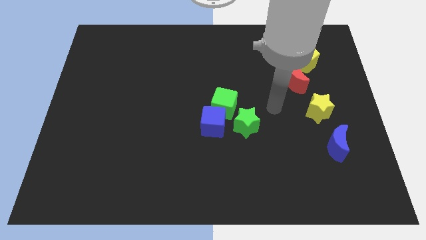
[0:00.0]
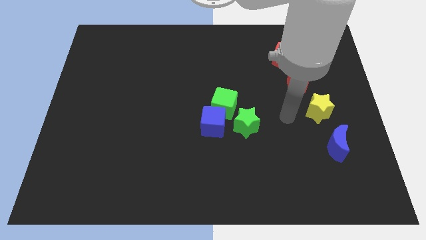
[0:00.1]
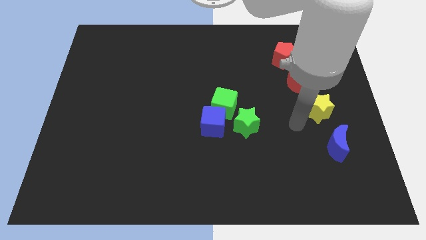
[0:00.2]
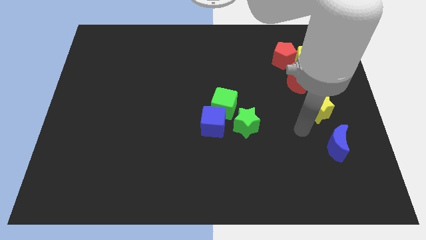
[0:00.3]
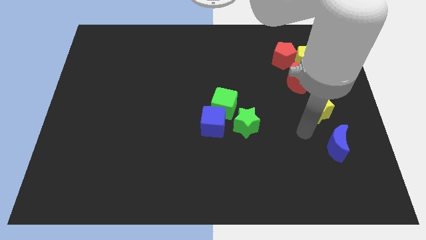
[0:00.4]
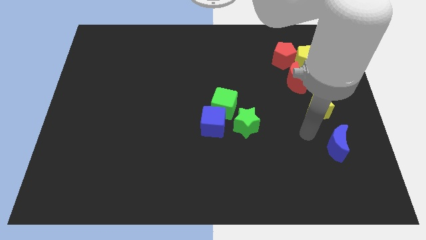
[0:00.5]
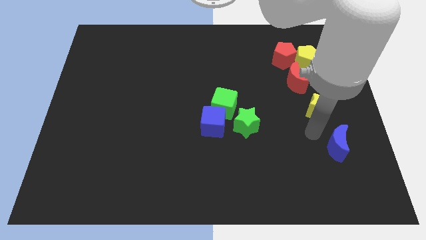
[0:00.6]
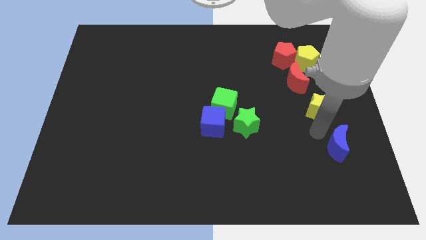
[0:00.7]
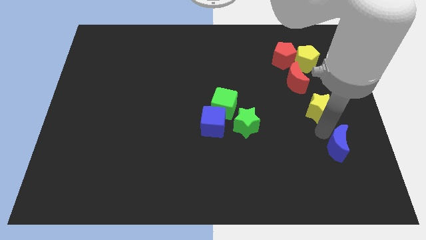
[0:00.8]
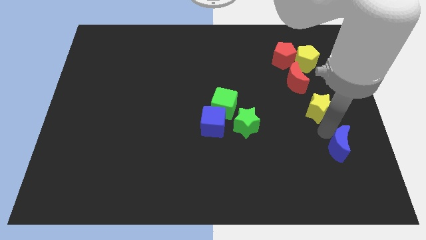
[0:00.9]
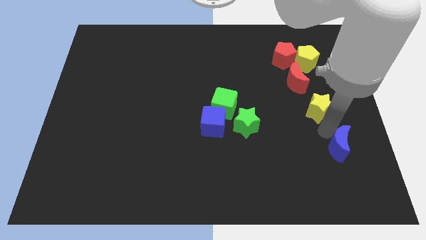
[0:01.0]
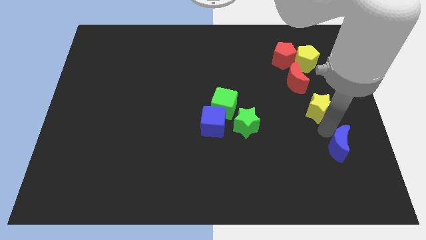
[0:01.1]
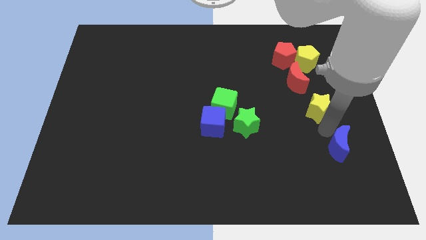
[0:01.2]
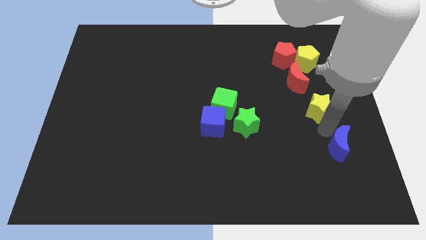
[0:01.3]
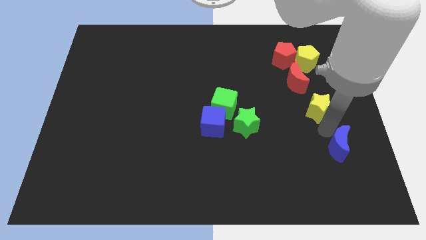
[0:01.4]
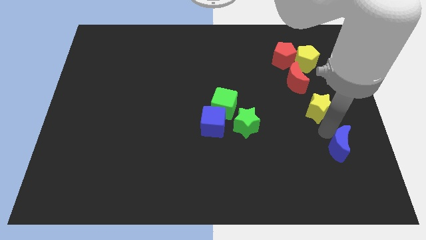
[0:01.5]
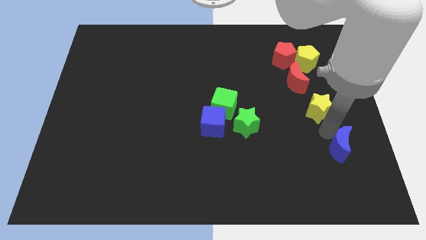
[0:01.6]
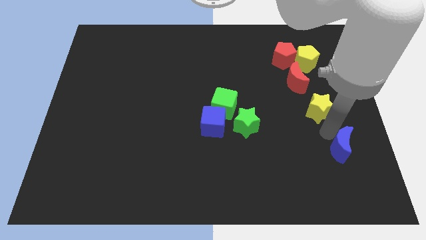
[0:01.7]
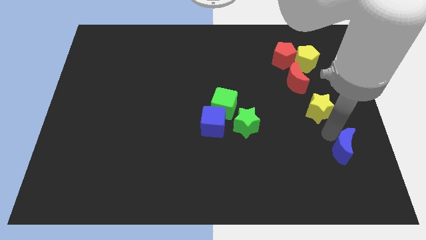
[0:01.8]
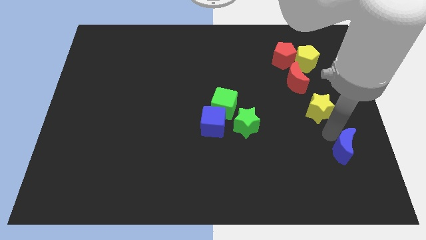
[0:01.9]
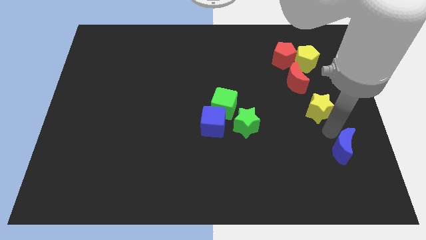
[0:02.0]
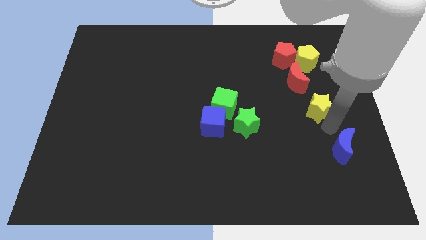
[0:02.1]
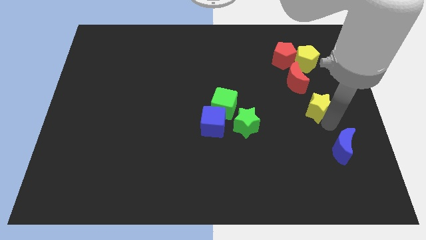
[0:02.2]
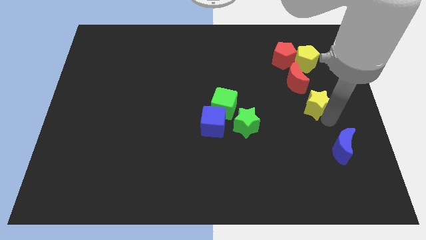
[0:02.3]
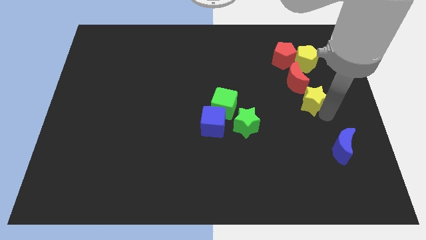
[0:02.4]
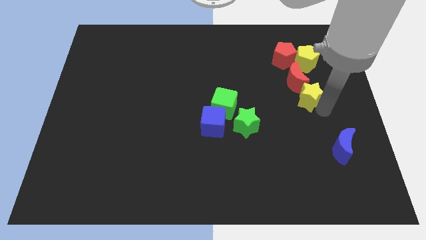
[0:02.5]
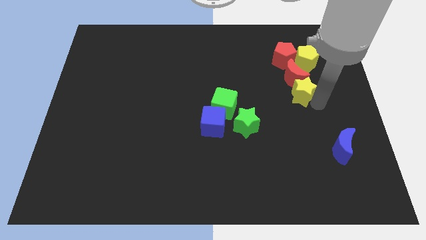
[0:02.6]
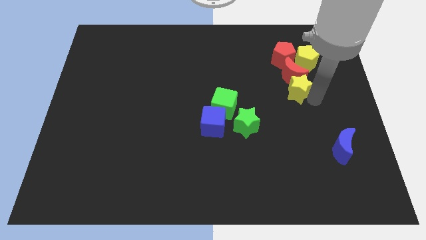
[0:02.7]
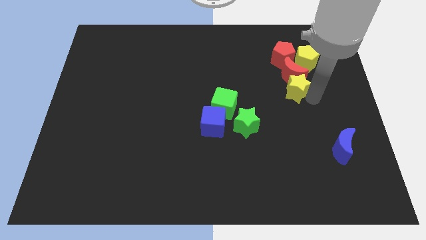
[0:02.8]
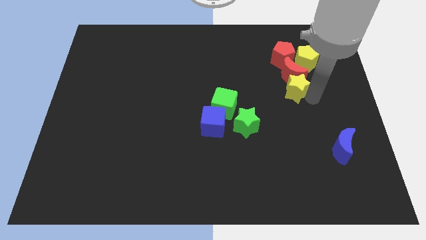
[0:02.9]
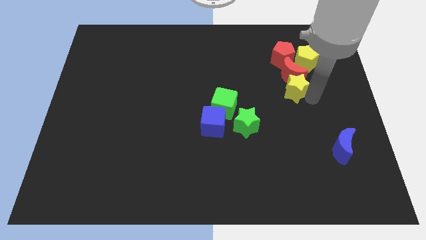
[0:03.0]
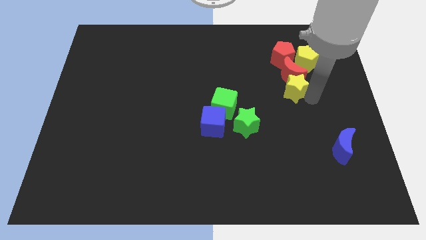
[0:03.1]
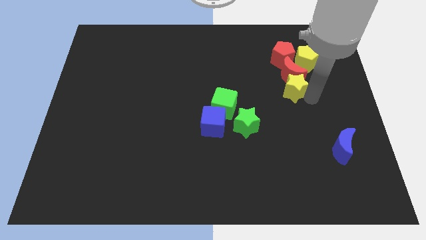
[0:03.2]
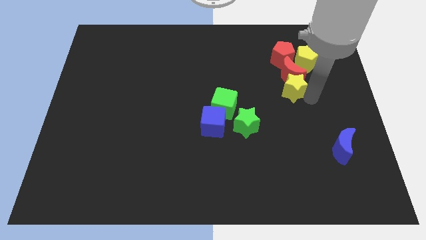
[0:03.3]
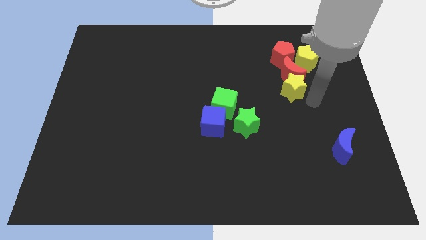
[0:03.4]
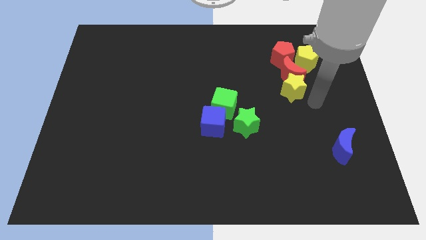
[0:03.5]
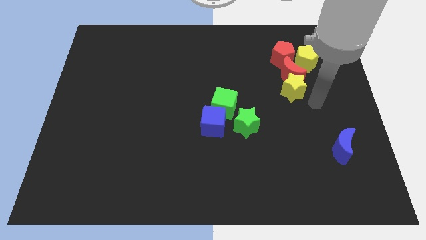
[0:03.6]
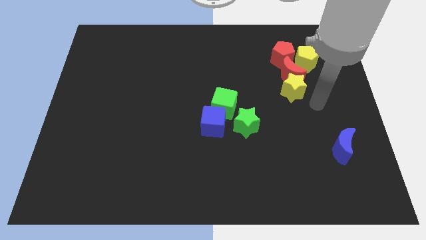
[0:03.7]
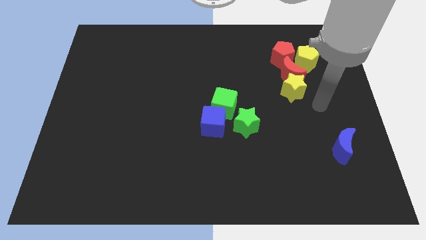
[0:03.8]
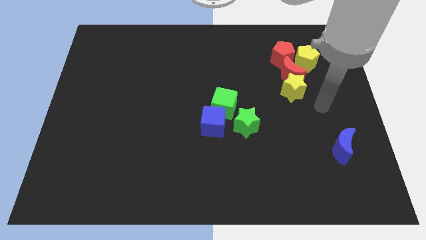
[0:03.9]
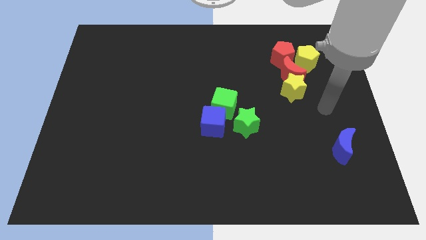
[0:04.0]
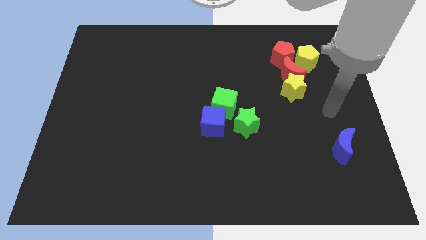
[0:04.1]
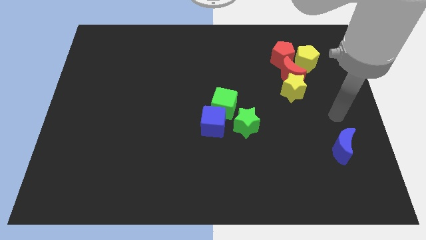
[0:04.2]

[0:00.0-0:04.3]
add the yellow star to the both red blocks and yellow pentagon

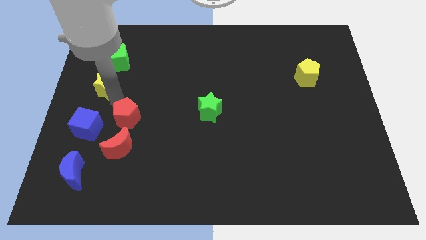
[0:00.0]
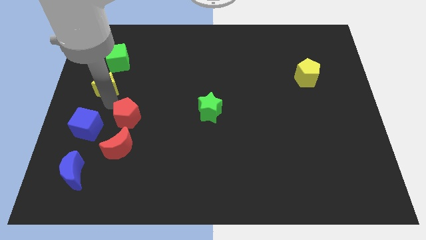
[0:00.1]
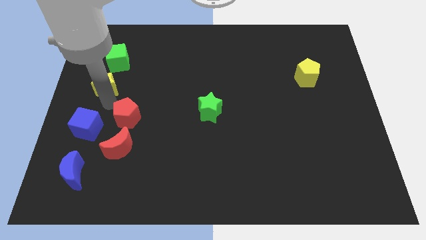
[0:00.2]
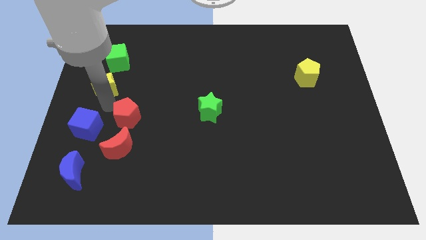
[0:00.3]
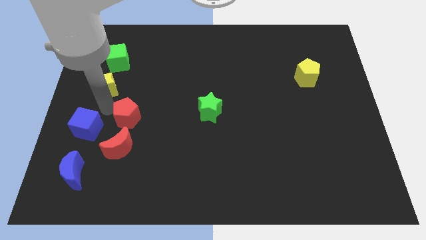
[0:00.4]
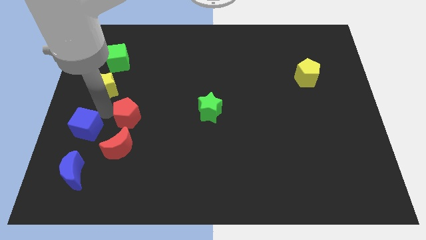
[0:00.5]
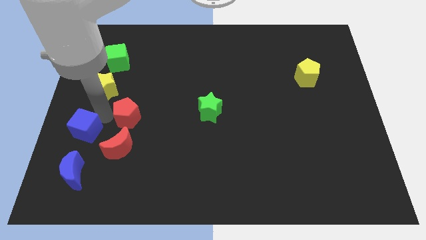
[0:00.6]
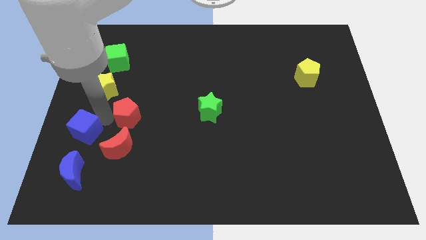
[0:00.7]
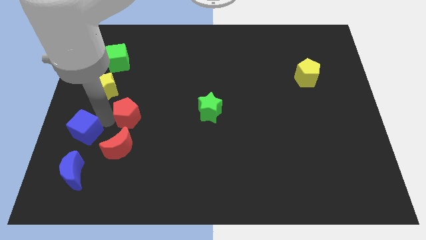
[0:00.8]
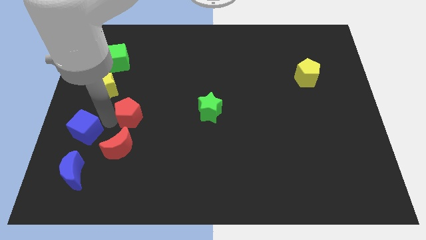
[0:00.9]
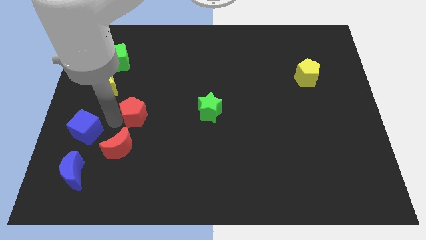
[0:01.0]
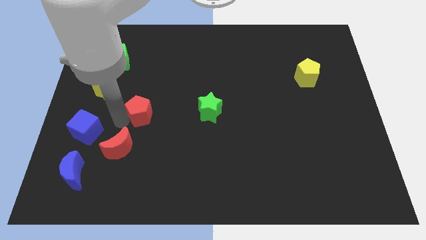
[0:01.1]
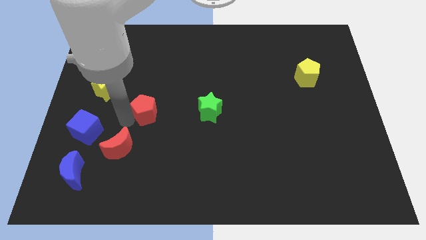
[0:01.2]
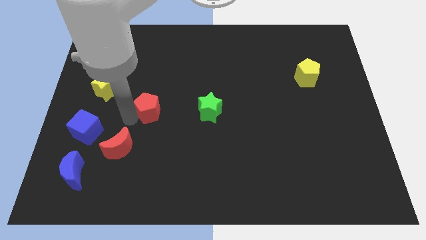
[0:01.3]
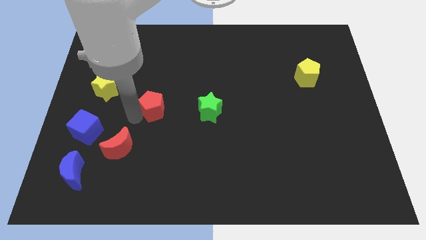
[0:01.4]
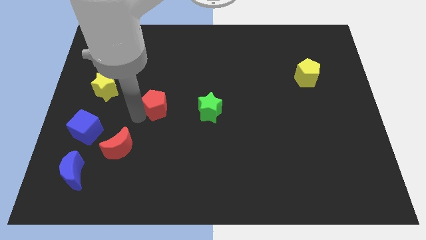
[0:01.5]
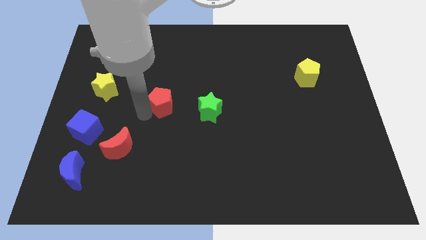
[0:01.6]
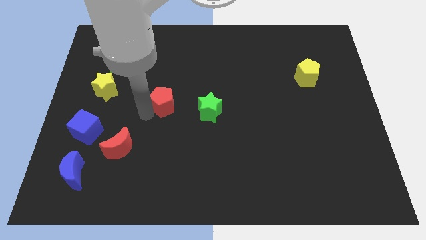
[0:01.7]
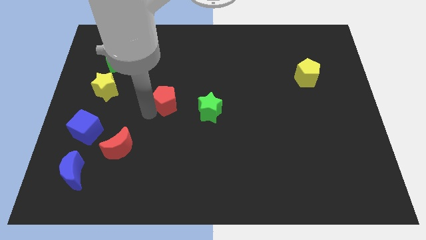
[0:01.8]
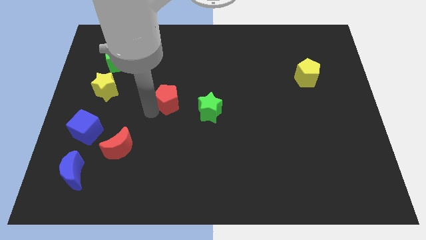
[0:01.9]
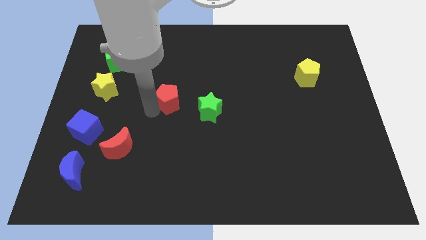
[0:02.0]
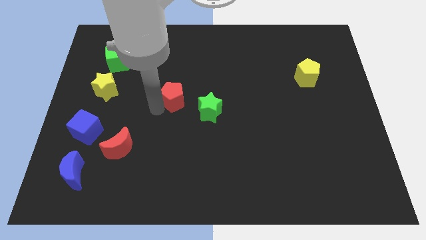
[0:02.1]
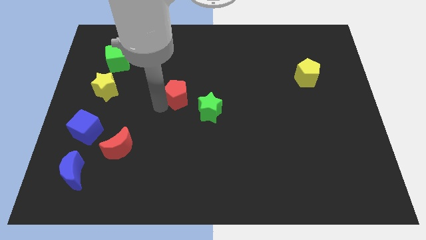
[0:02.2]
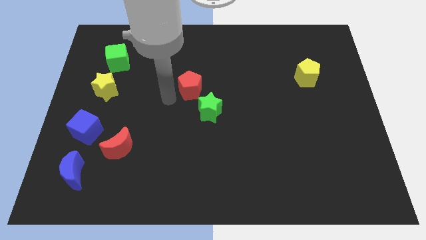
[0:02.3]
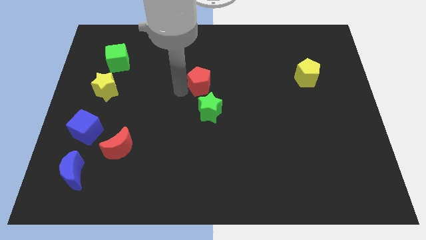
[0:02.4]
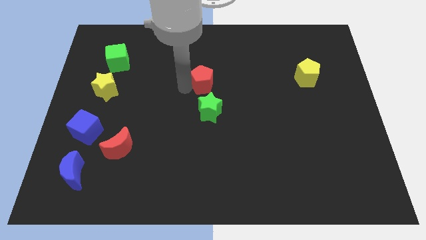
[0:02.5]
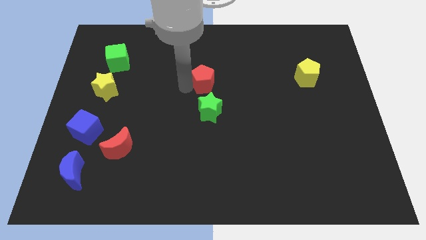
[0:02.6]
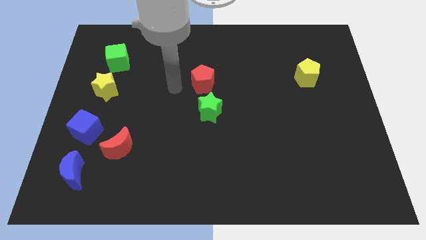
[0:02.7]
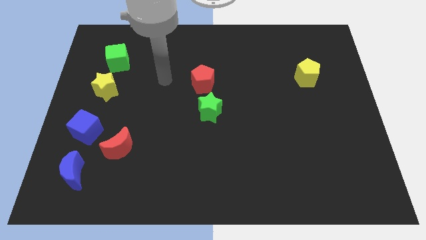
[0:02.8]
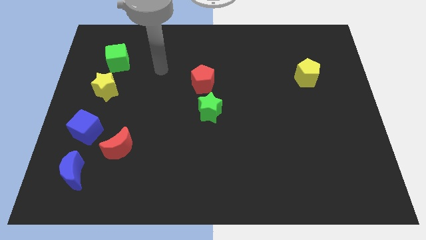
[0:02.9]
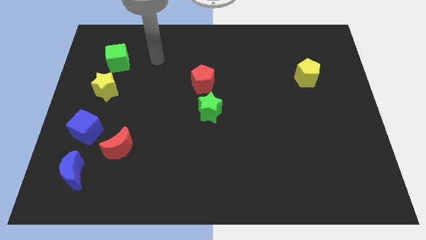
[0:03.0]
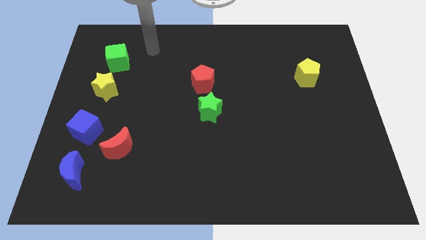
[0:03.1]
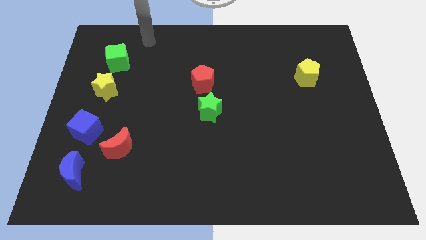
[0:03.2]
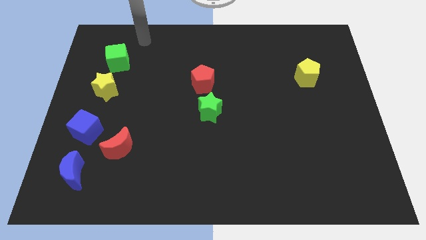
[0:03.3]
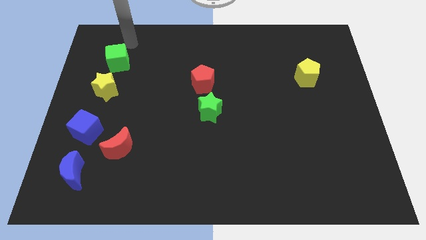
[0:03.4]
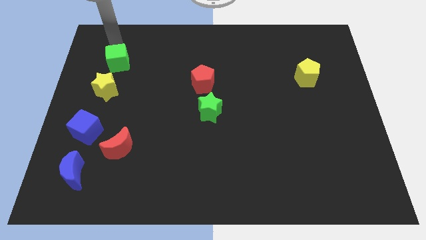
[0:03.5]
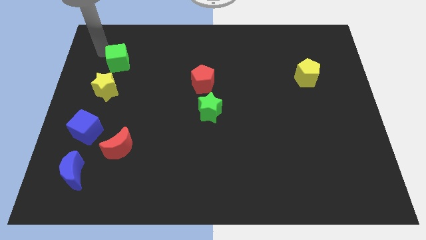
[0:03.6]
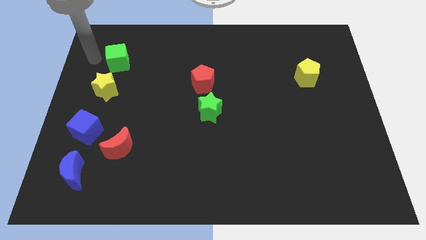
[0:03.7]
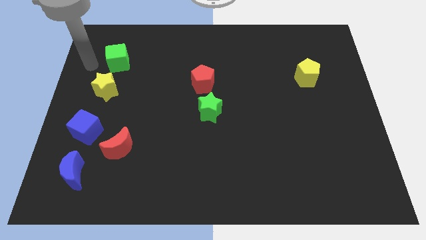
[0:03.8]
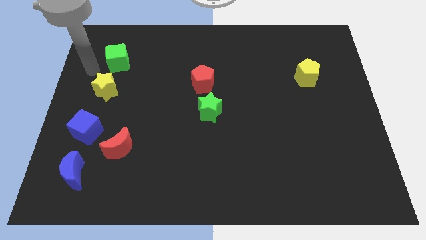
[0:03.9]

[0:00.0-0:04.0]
move the red pentagon vertically above the green star

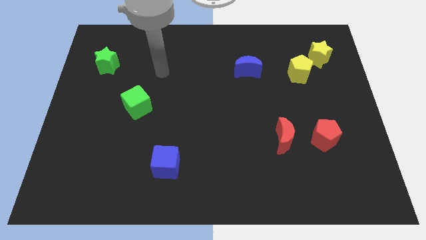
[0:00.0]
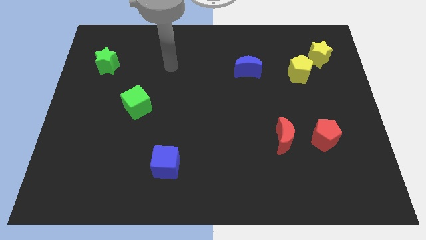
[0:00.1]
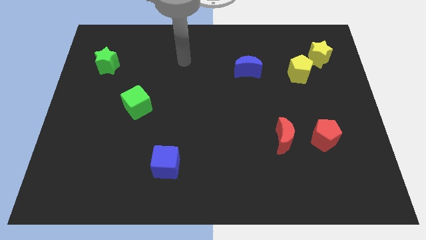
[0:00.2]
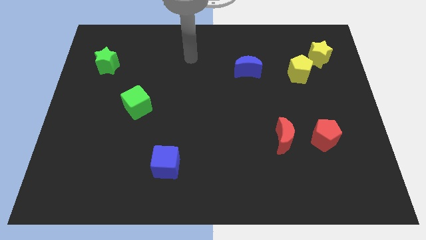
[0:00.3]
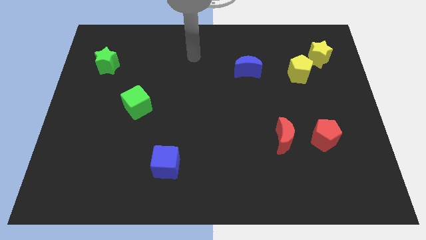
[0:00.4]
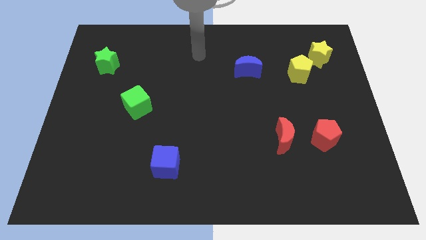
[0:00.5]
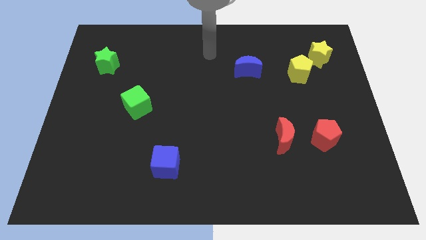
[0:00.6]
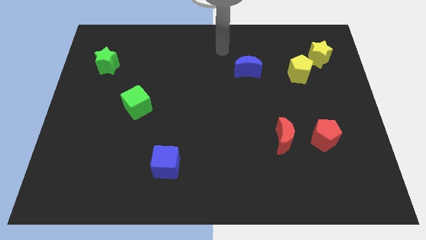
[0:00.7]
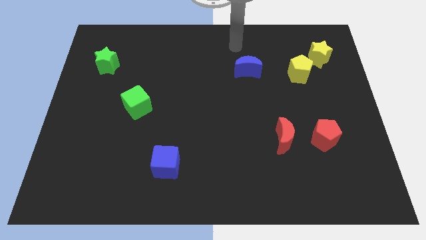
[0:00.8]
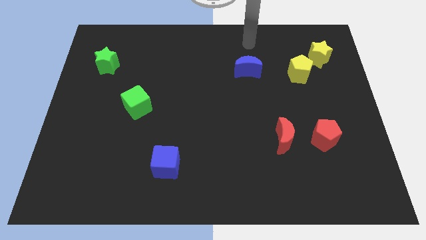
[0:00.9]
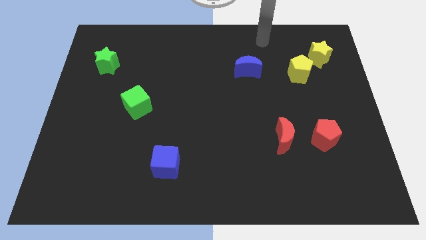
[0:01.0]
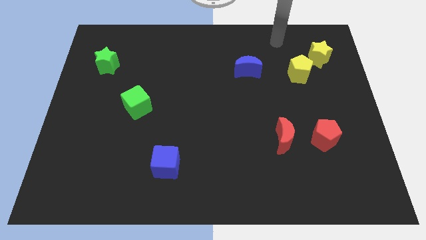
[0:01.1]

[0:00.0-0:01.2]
move the pointer towards the top right side of the board
